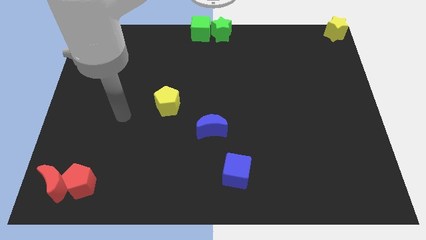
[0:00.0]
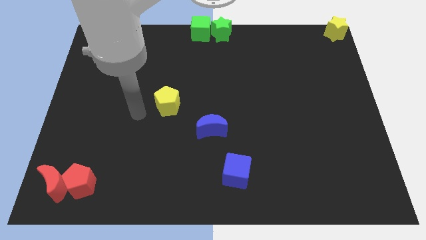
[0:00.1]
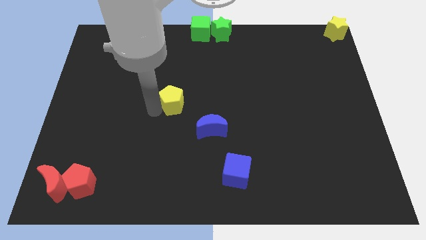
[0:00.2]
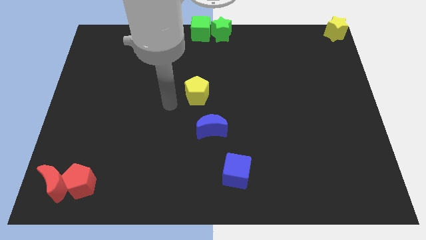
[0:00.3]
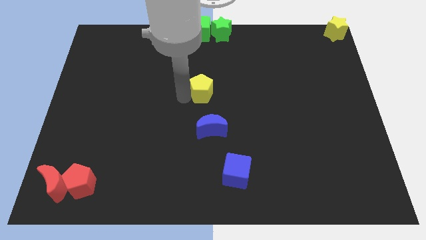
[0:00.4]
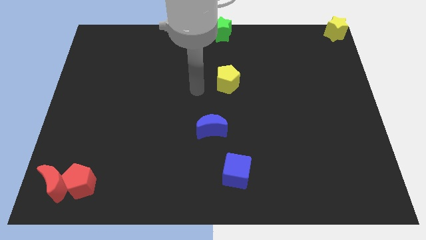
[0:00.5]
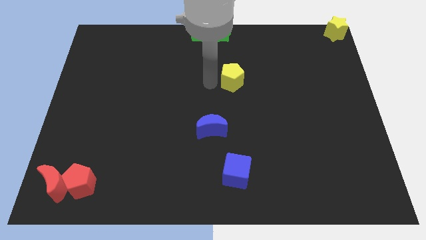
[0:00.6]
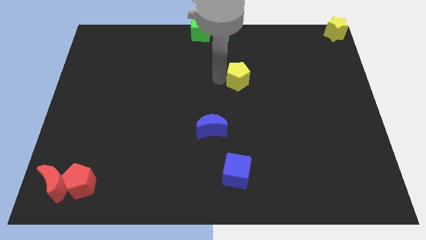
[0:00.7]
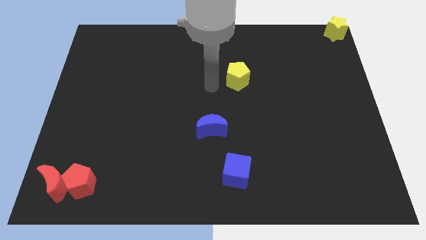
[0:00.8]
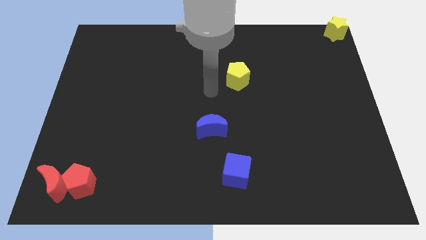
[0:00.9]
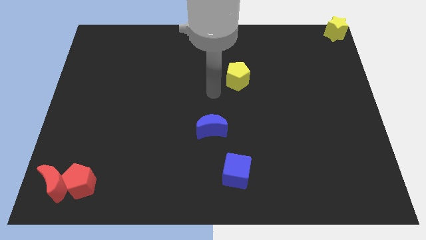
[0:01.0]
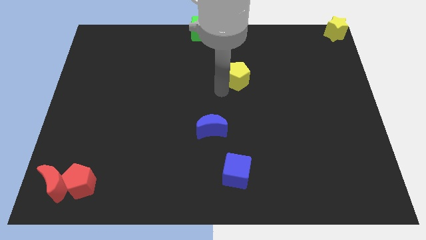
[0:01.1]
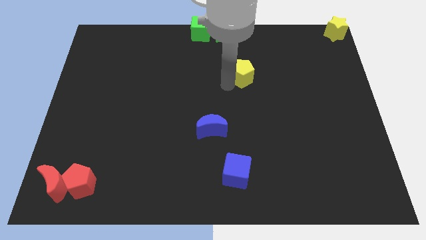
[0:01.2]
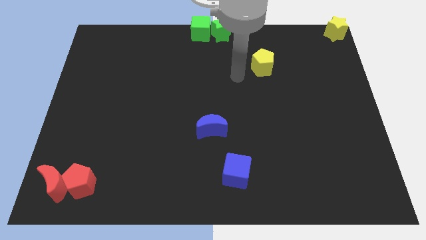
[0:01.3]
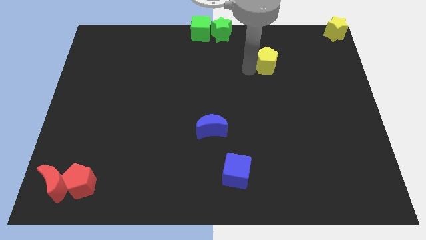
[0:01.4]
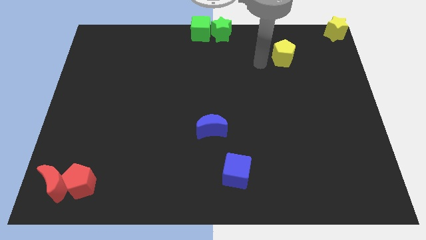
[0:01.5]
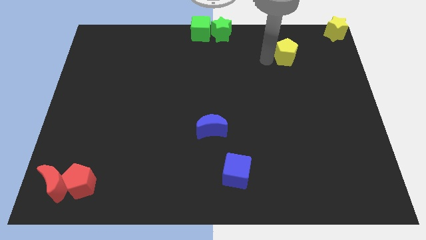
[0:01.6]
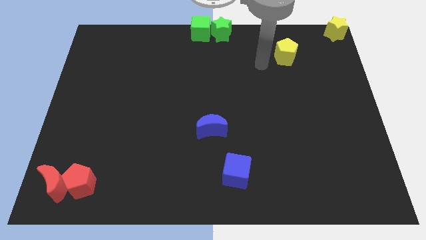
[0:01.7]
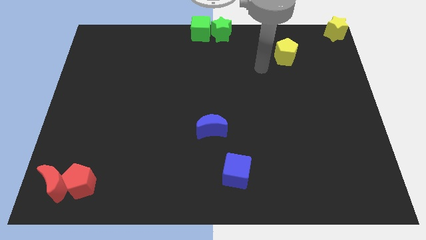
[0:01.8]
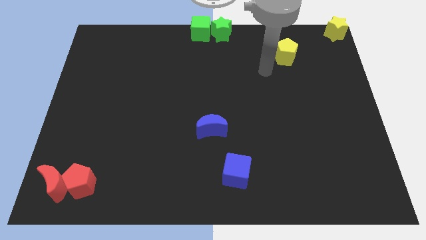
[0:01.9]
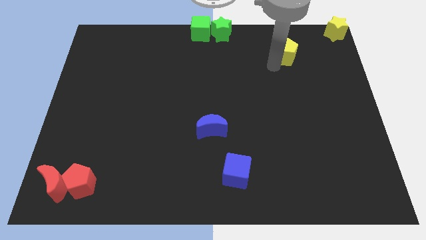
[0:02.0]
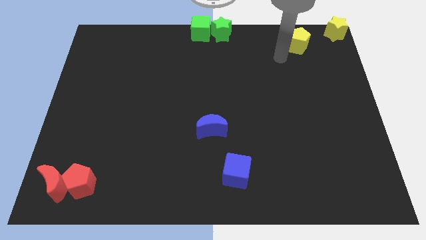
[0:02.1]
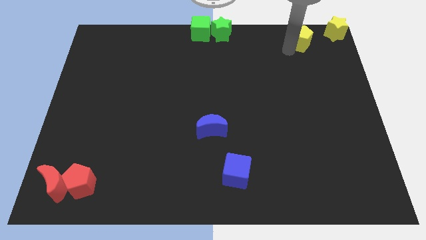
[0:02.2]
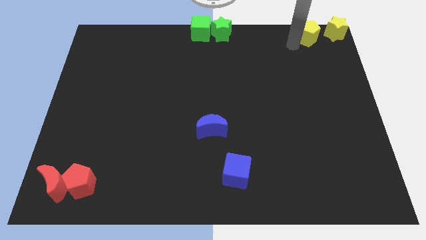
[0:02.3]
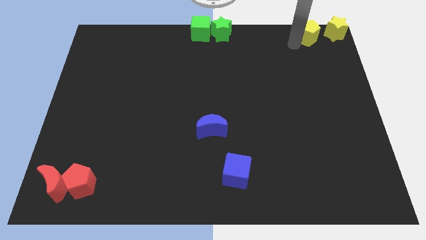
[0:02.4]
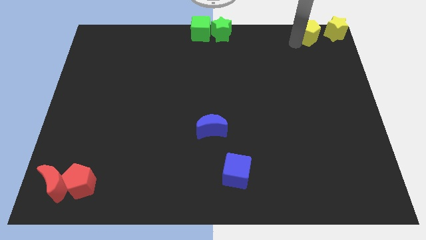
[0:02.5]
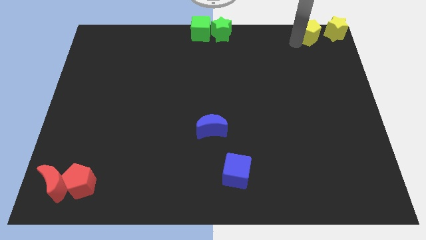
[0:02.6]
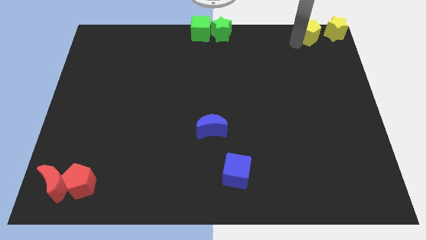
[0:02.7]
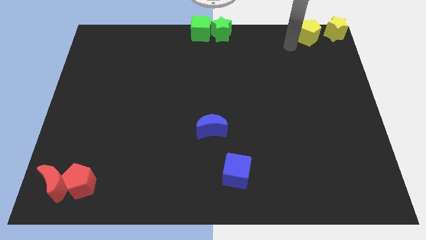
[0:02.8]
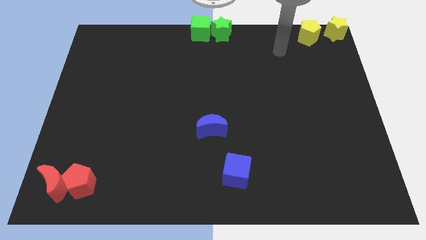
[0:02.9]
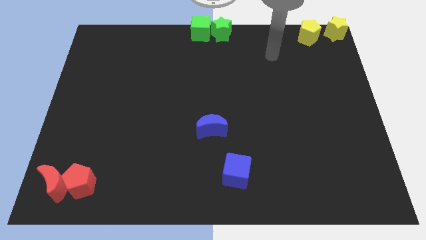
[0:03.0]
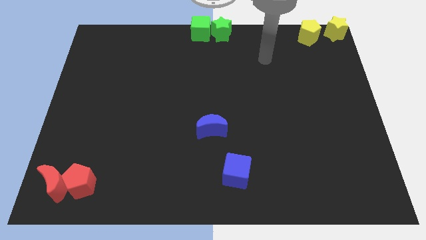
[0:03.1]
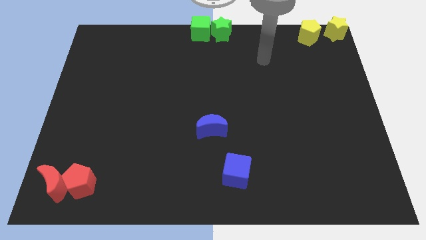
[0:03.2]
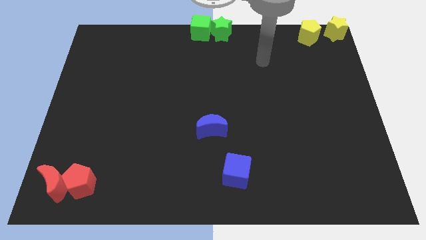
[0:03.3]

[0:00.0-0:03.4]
place the yellow pentagon left to the yellow star

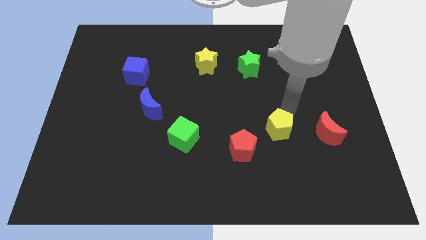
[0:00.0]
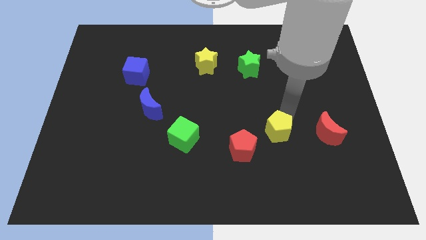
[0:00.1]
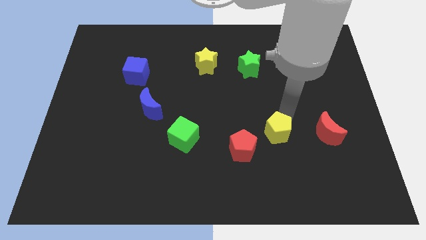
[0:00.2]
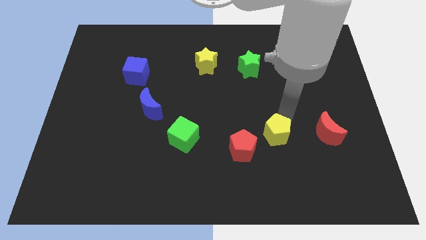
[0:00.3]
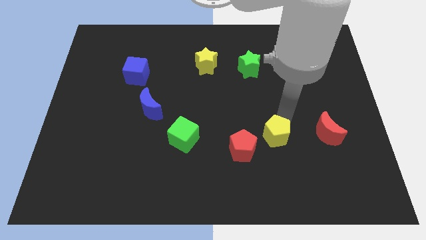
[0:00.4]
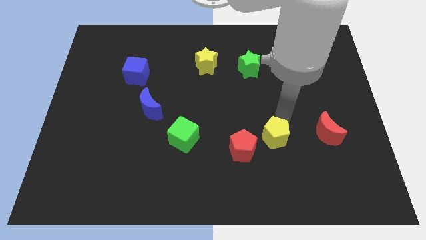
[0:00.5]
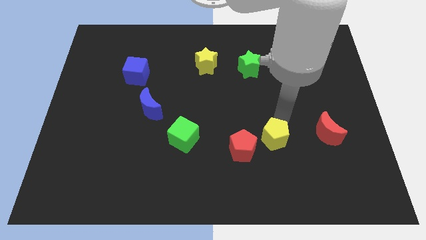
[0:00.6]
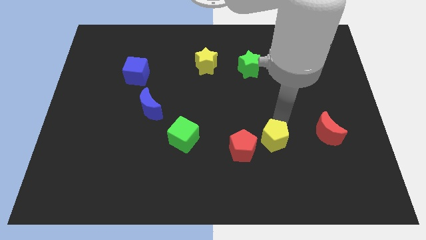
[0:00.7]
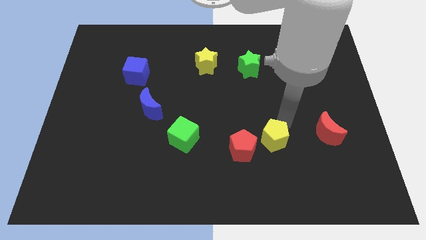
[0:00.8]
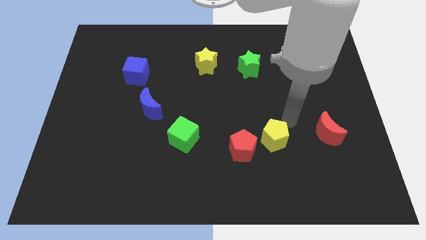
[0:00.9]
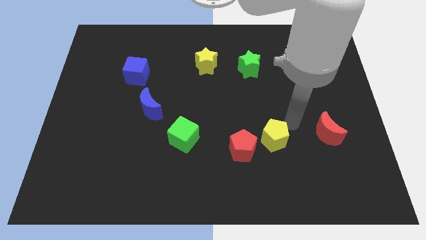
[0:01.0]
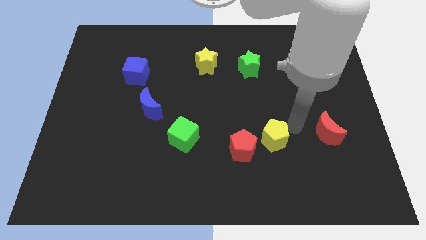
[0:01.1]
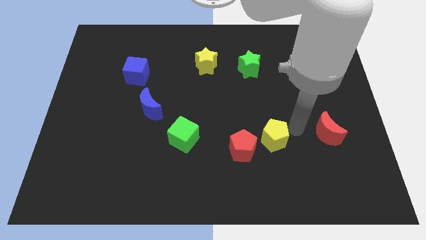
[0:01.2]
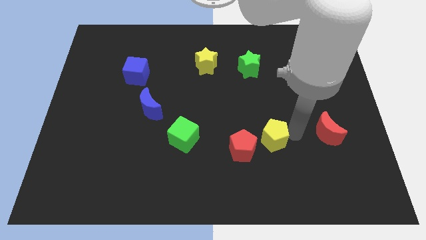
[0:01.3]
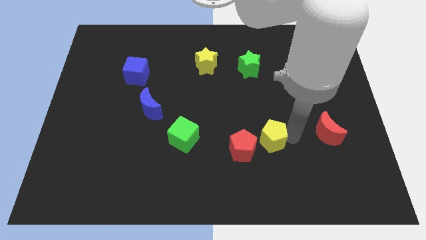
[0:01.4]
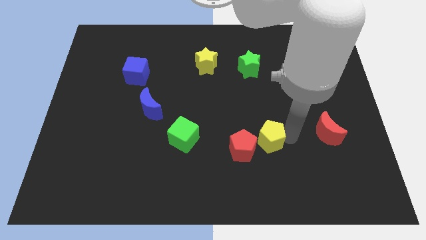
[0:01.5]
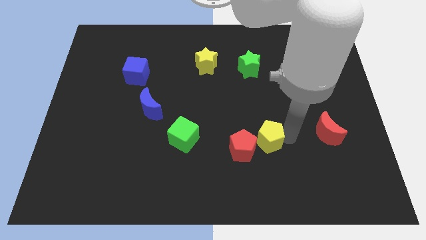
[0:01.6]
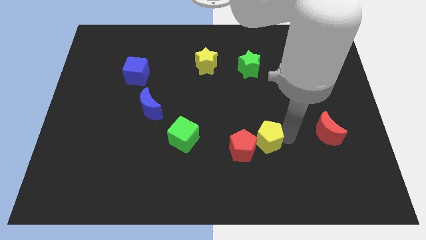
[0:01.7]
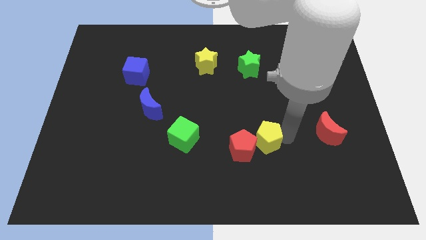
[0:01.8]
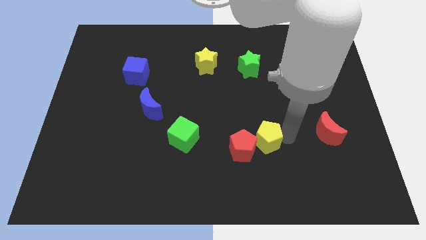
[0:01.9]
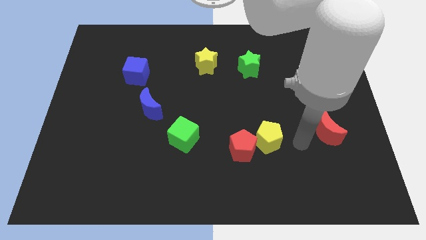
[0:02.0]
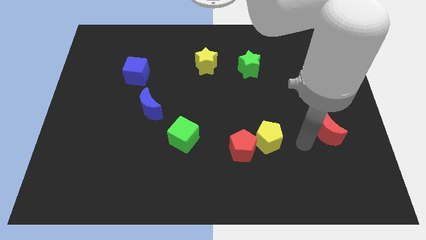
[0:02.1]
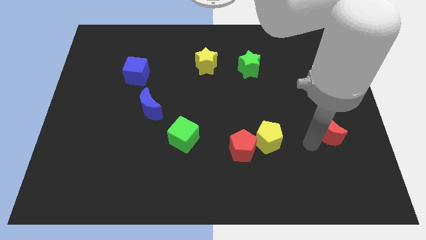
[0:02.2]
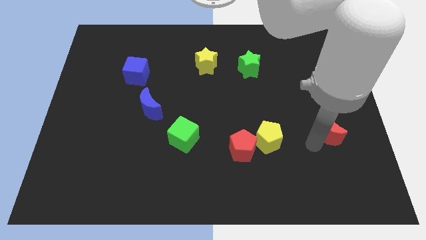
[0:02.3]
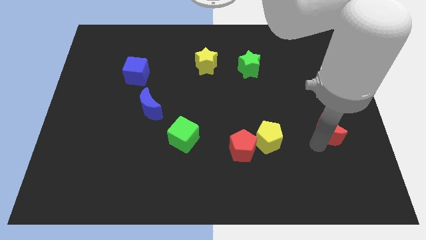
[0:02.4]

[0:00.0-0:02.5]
slide the yellow pentagon close to the red pentagon

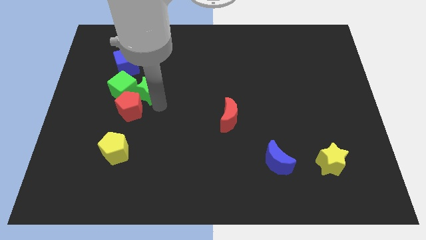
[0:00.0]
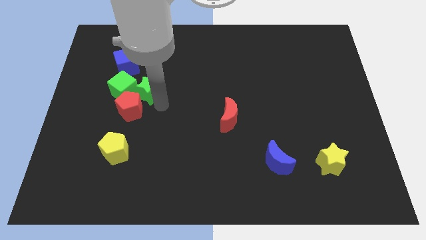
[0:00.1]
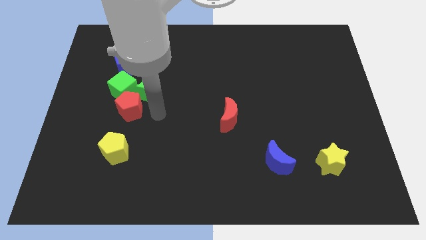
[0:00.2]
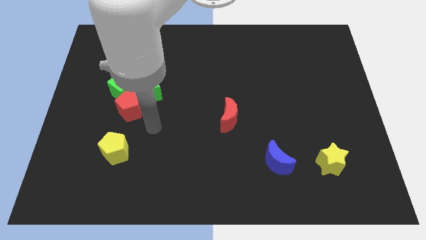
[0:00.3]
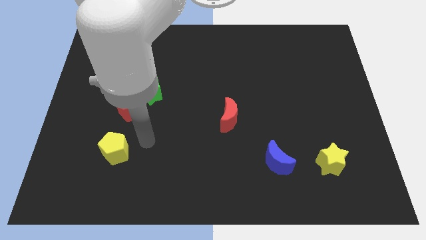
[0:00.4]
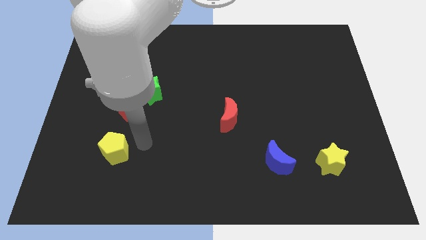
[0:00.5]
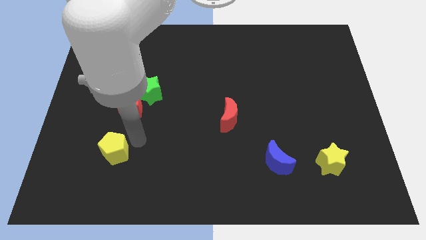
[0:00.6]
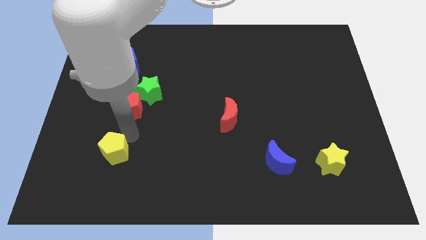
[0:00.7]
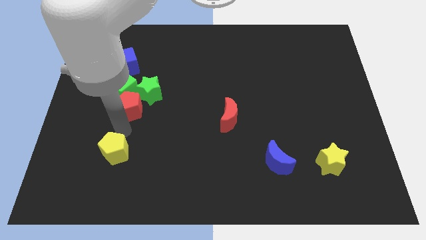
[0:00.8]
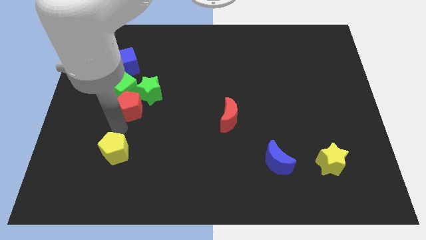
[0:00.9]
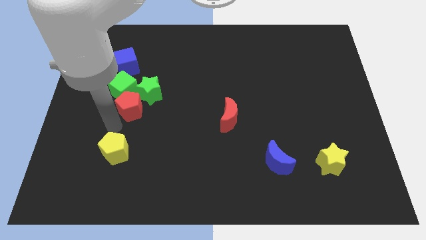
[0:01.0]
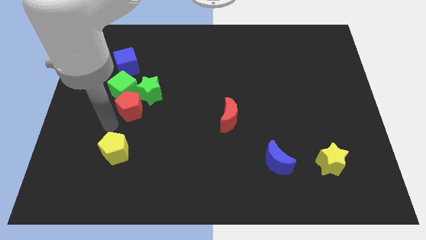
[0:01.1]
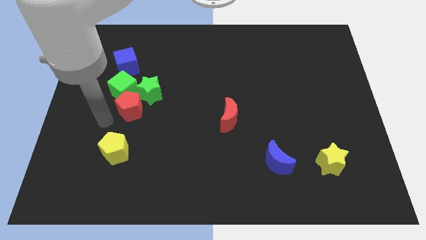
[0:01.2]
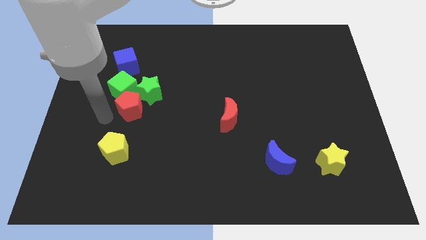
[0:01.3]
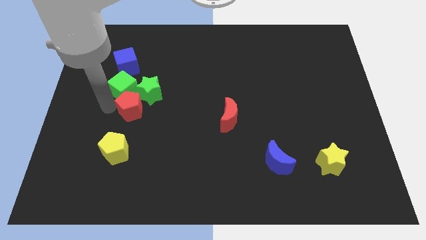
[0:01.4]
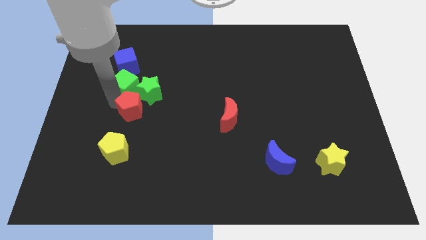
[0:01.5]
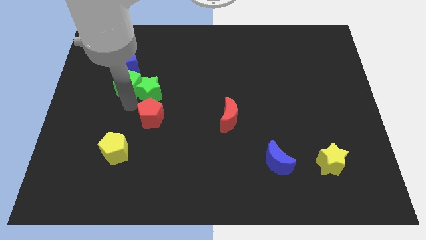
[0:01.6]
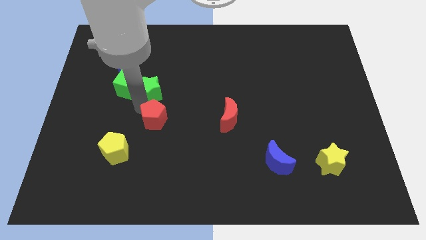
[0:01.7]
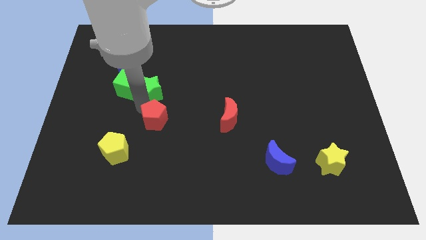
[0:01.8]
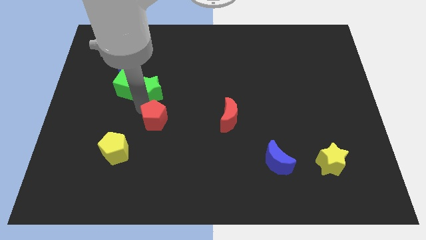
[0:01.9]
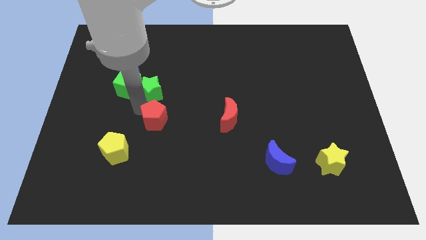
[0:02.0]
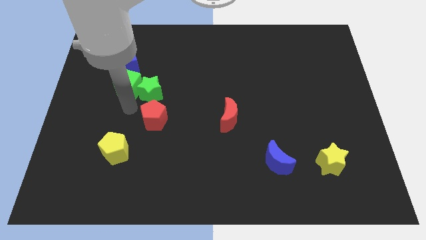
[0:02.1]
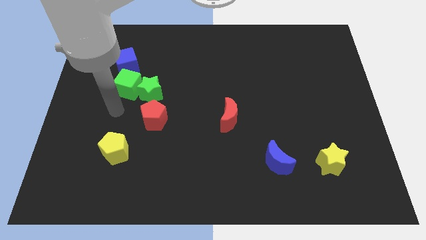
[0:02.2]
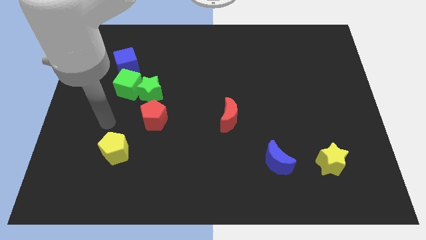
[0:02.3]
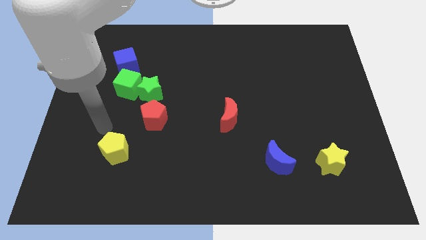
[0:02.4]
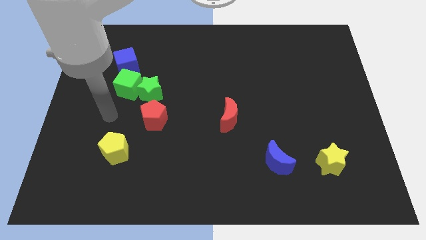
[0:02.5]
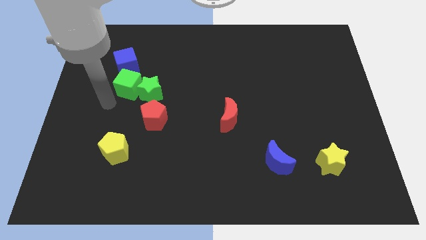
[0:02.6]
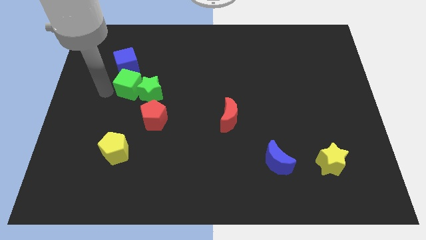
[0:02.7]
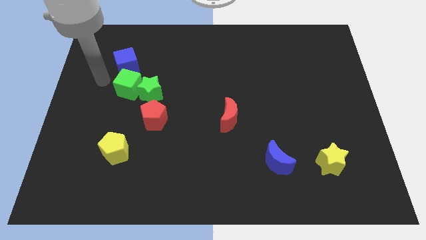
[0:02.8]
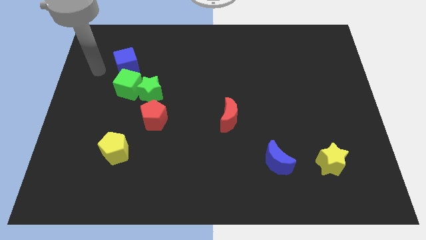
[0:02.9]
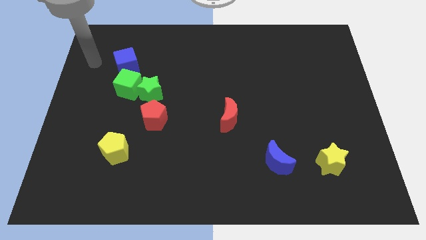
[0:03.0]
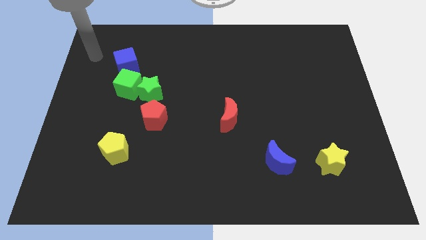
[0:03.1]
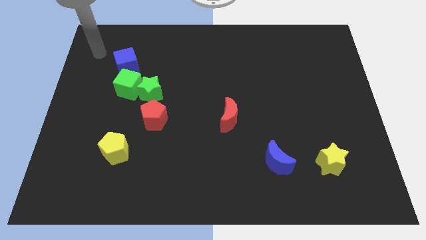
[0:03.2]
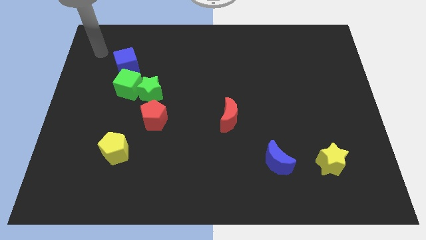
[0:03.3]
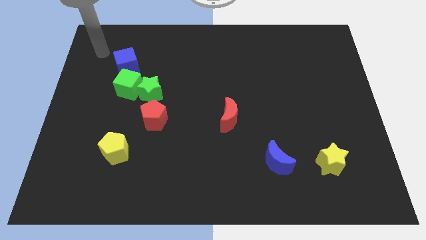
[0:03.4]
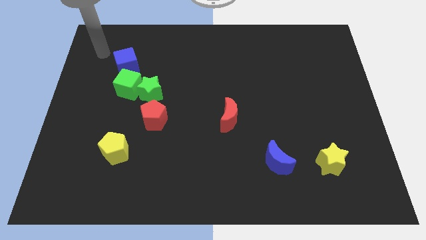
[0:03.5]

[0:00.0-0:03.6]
place red pentagon below green star
